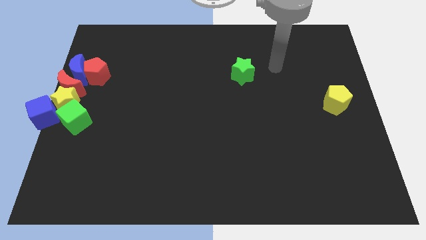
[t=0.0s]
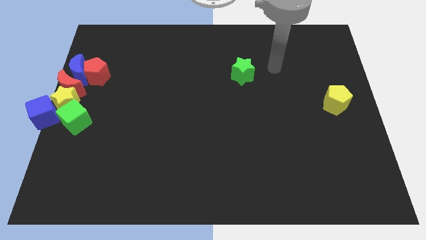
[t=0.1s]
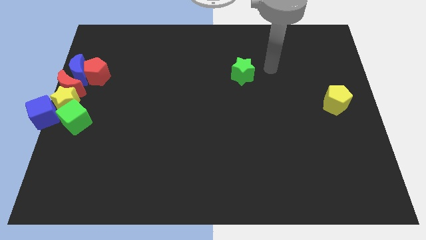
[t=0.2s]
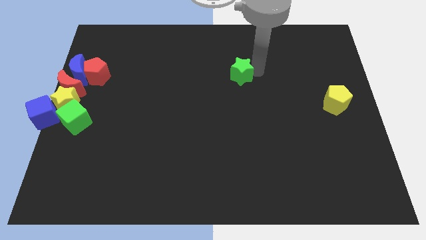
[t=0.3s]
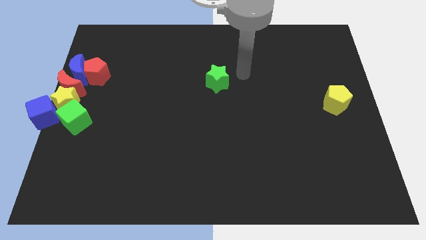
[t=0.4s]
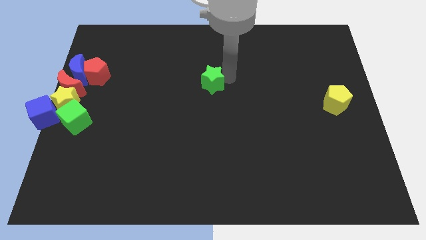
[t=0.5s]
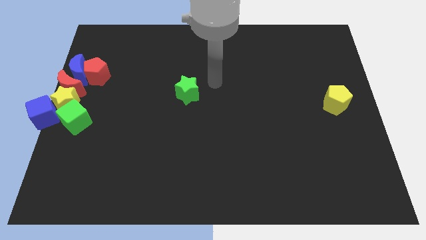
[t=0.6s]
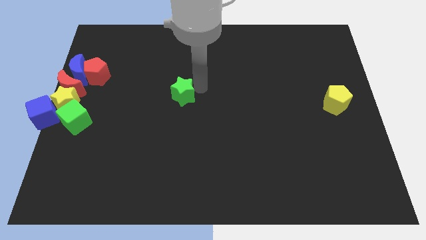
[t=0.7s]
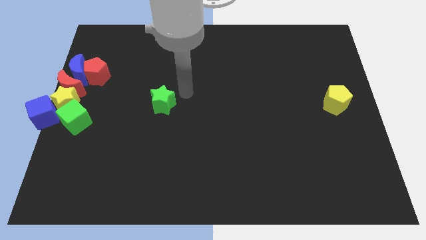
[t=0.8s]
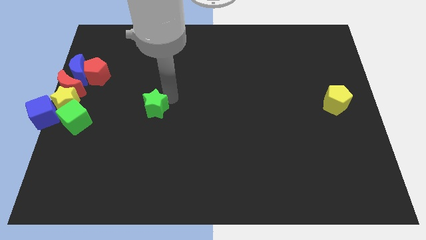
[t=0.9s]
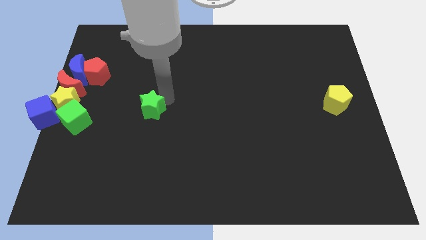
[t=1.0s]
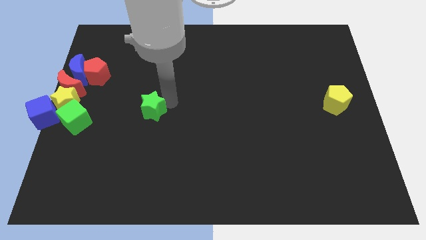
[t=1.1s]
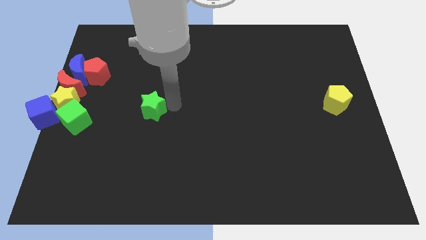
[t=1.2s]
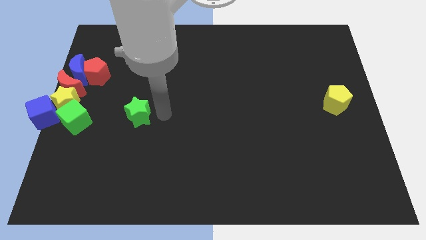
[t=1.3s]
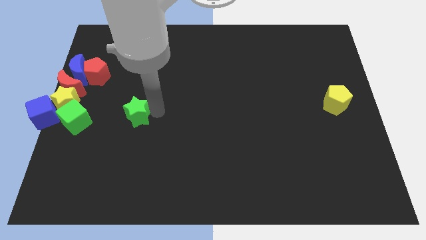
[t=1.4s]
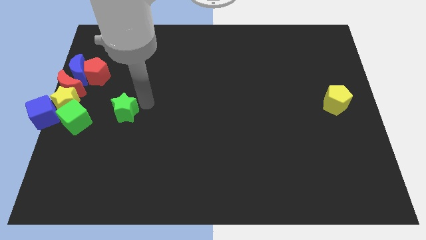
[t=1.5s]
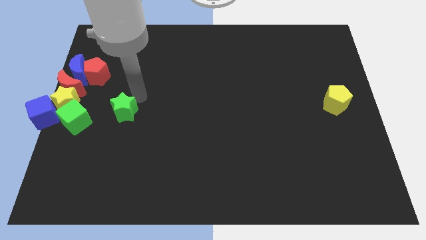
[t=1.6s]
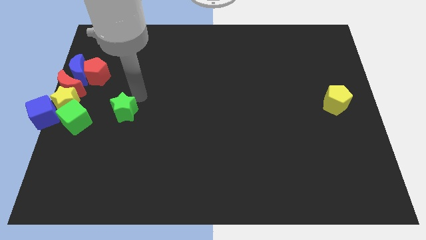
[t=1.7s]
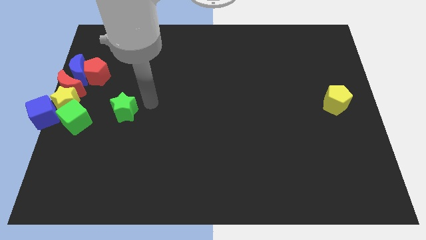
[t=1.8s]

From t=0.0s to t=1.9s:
push the green star towards the green cube

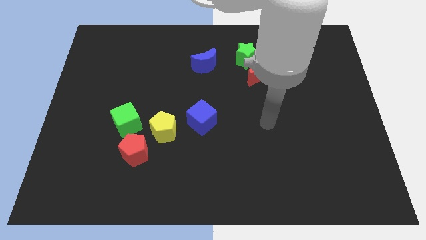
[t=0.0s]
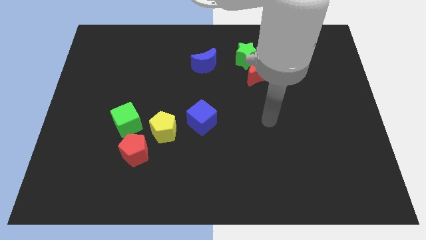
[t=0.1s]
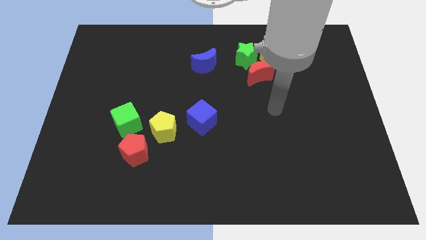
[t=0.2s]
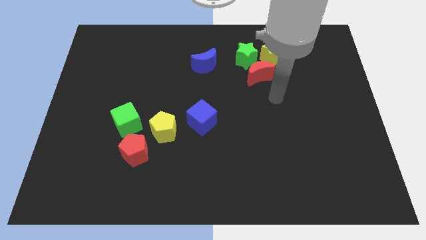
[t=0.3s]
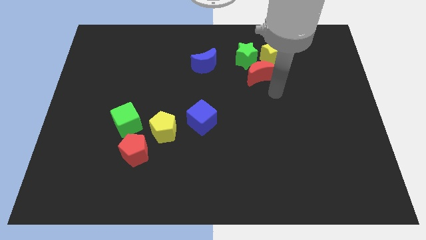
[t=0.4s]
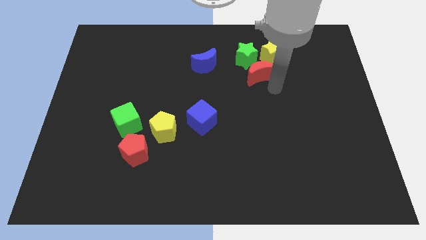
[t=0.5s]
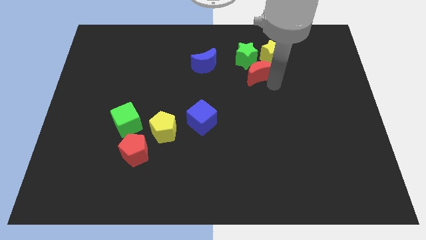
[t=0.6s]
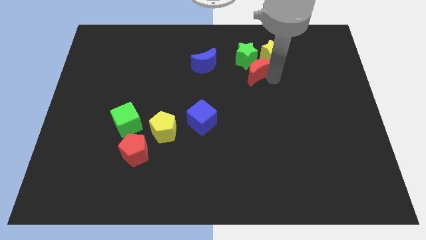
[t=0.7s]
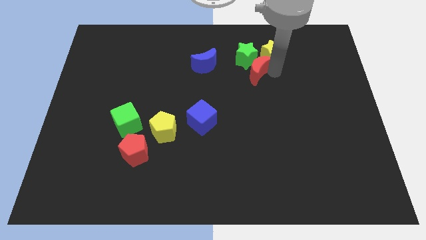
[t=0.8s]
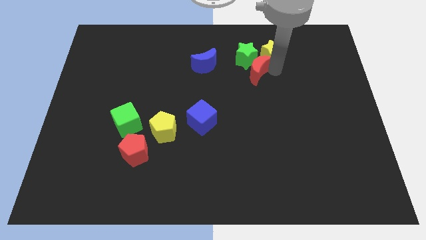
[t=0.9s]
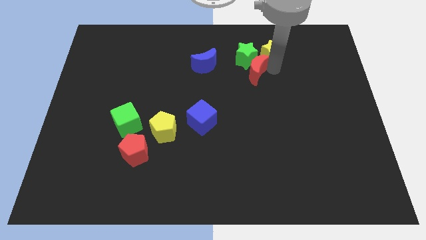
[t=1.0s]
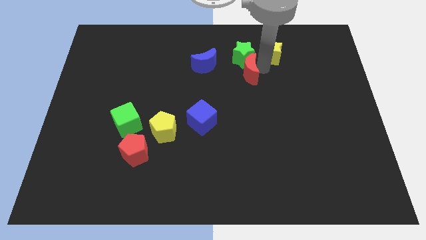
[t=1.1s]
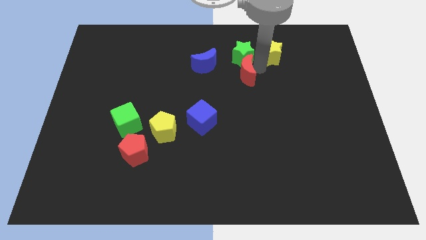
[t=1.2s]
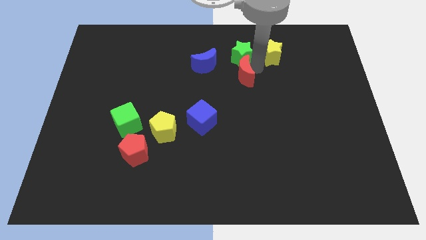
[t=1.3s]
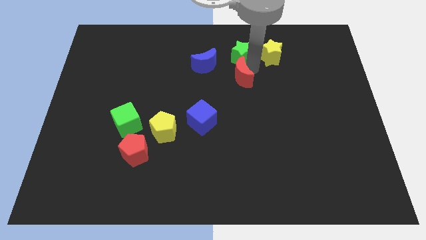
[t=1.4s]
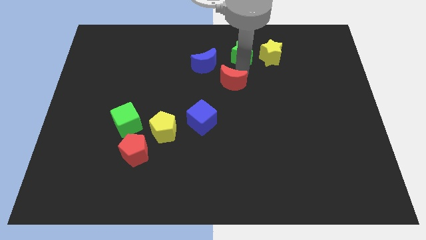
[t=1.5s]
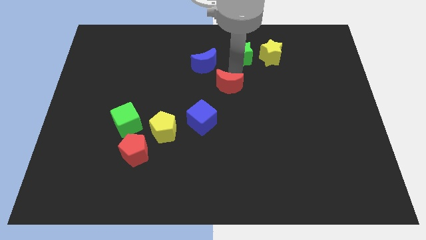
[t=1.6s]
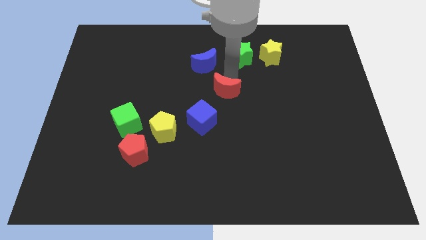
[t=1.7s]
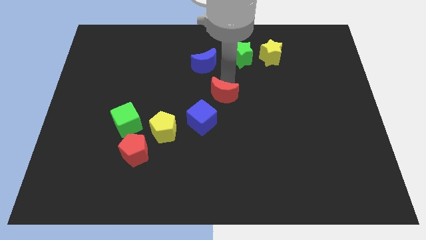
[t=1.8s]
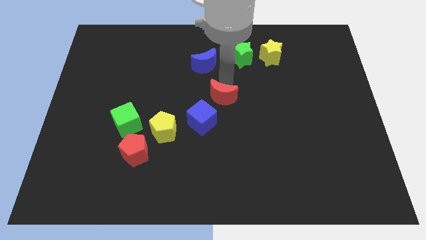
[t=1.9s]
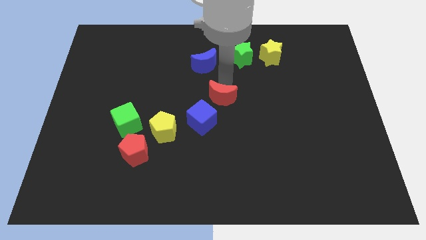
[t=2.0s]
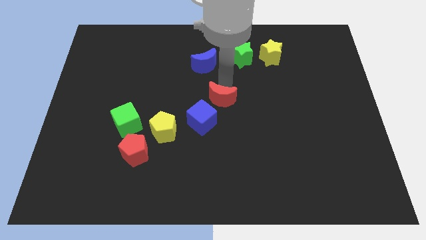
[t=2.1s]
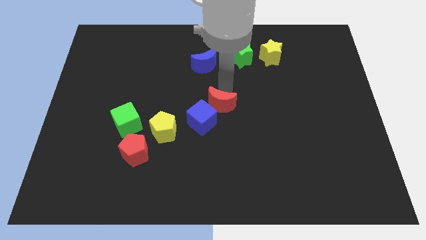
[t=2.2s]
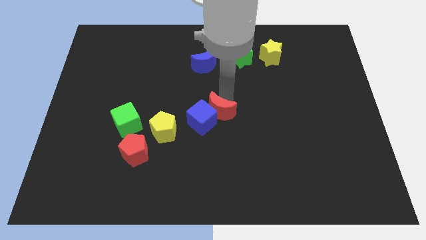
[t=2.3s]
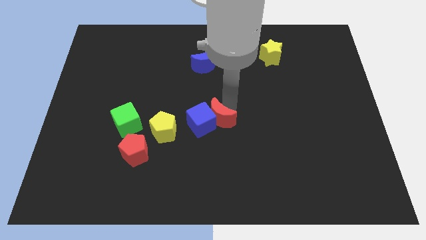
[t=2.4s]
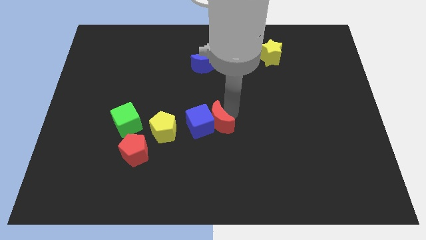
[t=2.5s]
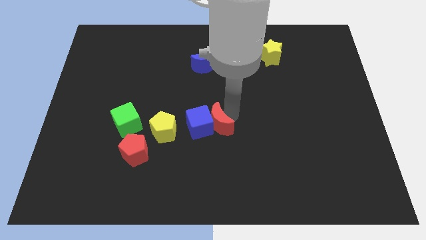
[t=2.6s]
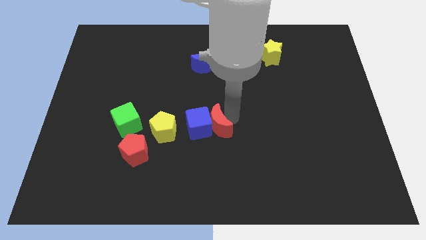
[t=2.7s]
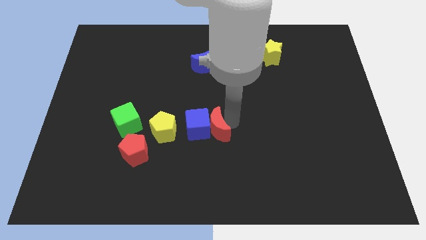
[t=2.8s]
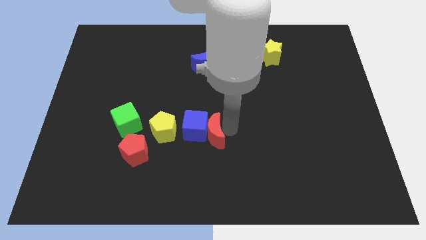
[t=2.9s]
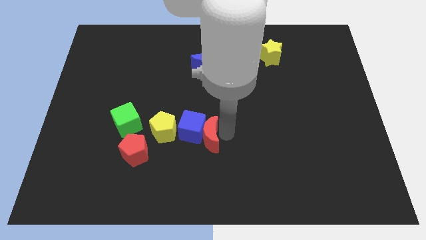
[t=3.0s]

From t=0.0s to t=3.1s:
push red moon into blue cube

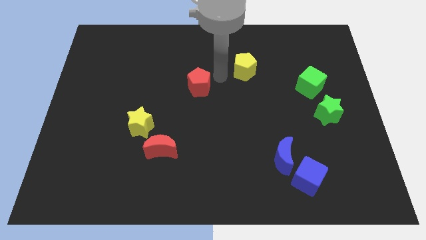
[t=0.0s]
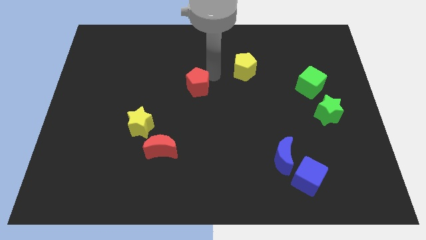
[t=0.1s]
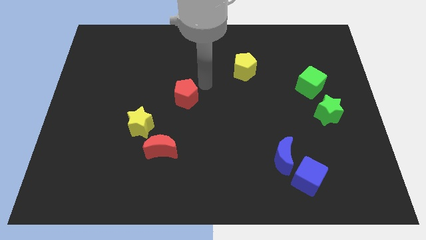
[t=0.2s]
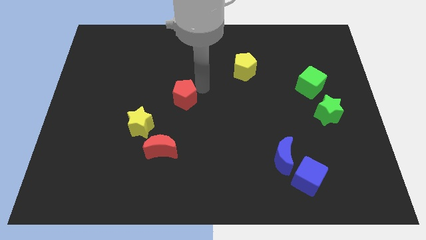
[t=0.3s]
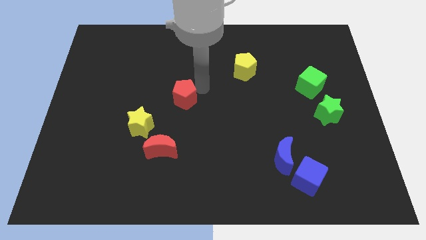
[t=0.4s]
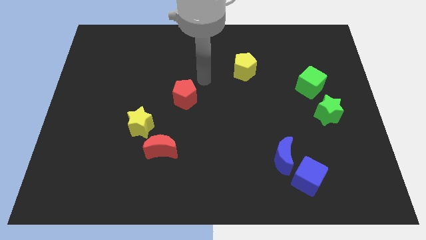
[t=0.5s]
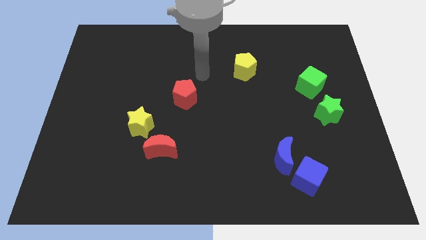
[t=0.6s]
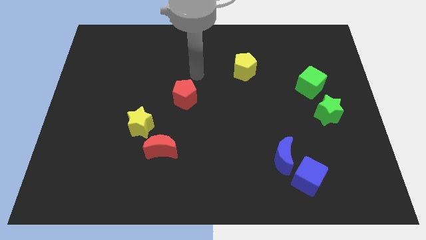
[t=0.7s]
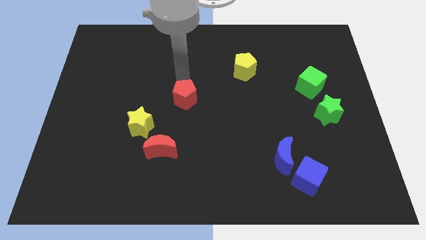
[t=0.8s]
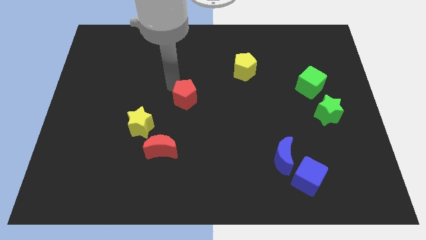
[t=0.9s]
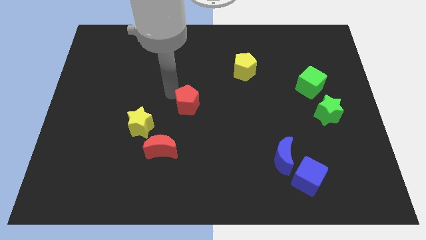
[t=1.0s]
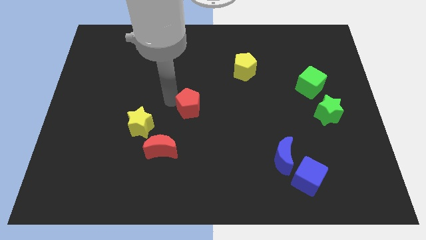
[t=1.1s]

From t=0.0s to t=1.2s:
push the red pentagon towards the red moon

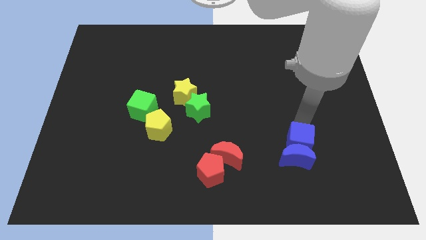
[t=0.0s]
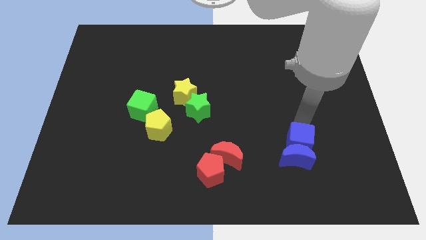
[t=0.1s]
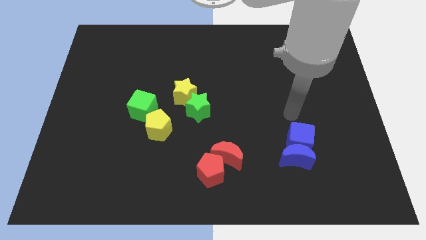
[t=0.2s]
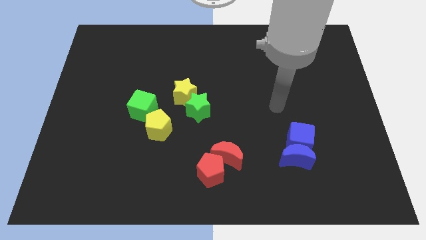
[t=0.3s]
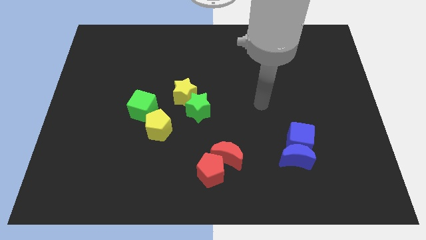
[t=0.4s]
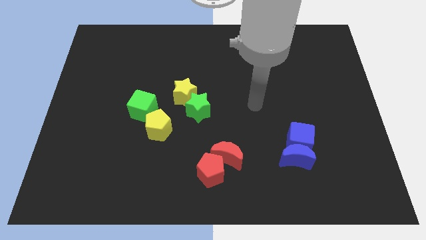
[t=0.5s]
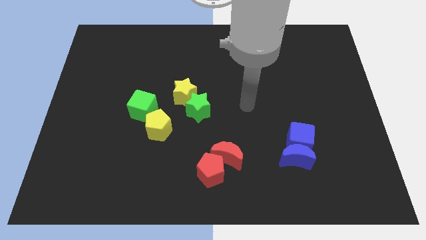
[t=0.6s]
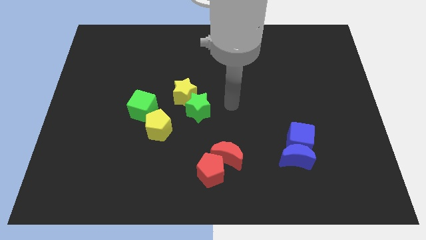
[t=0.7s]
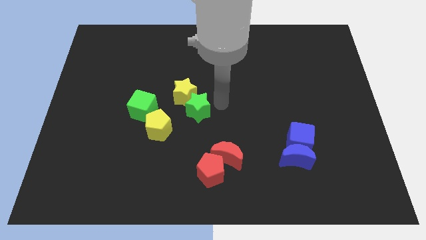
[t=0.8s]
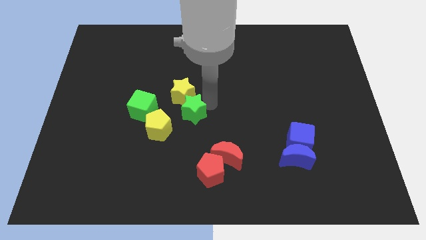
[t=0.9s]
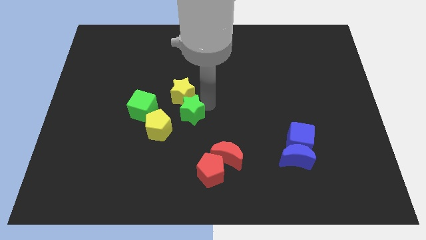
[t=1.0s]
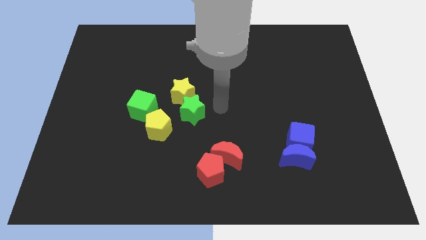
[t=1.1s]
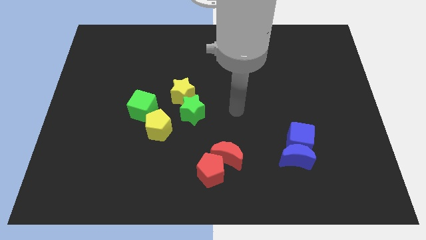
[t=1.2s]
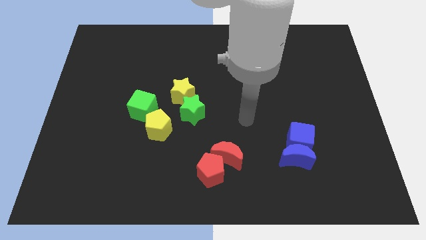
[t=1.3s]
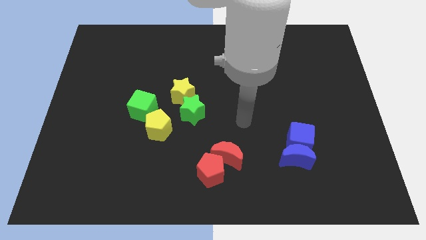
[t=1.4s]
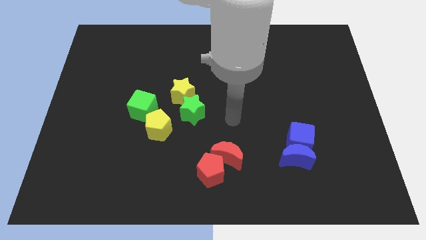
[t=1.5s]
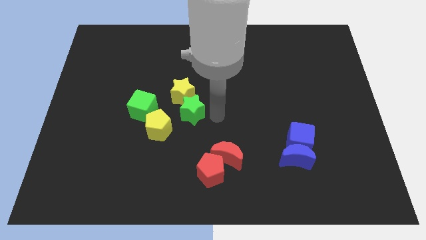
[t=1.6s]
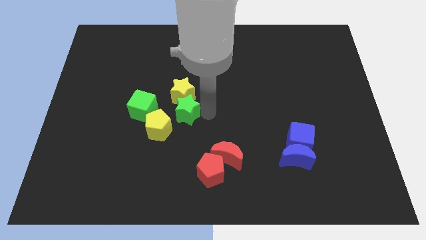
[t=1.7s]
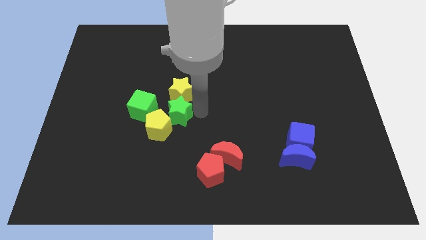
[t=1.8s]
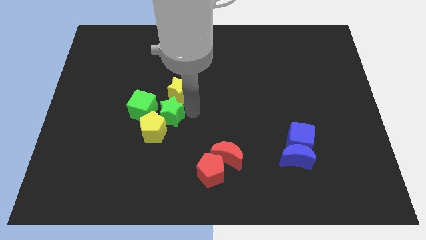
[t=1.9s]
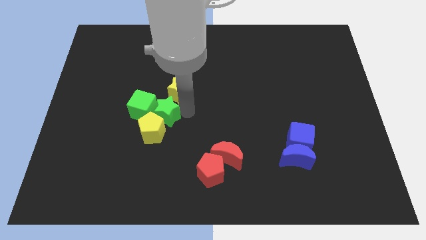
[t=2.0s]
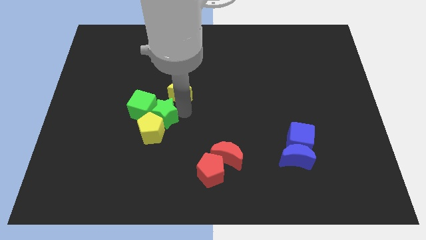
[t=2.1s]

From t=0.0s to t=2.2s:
place the green star right side of the green cube

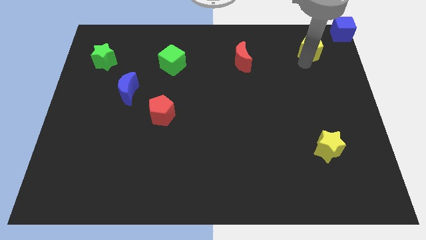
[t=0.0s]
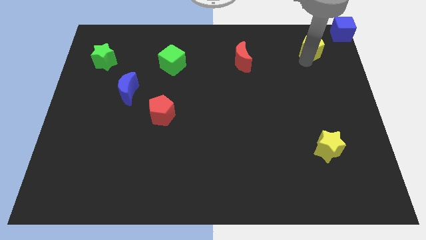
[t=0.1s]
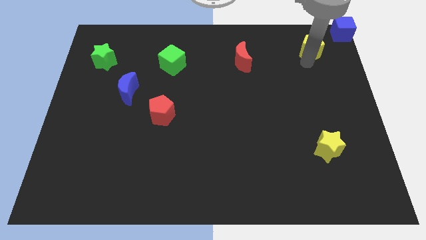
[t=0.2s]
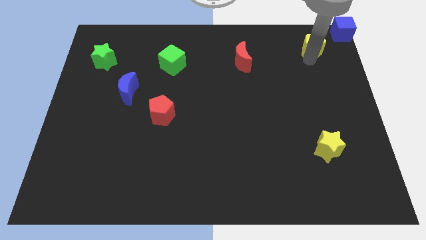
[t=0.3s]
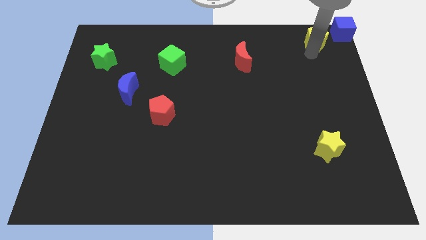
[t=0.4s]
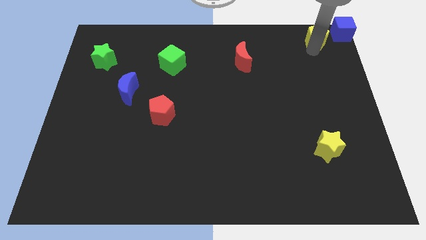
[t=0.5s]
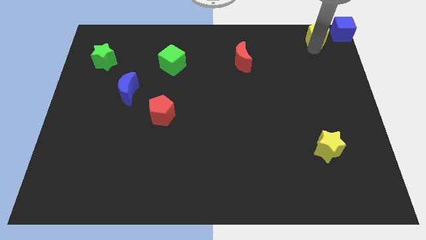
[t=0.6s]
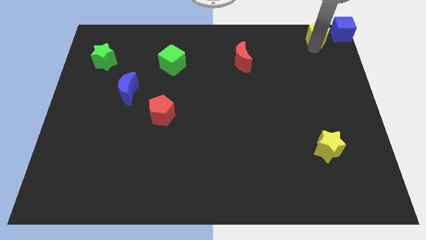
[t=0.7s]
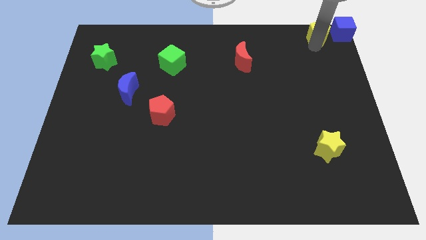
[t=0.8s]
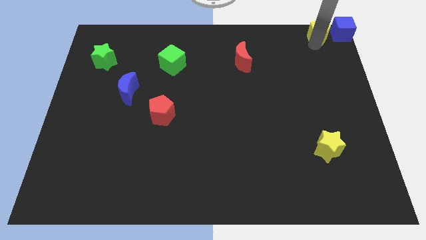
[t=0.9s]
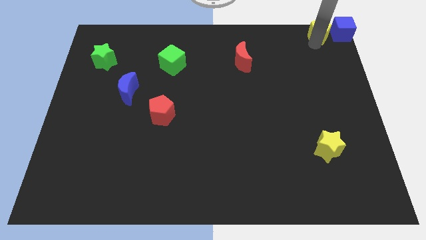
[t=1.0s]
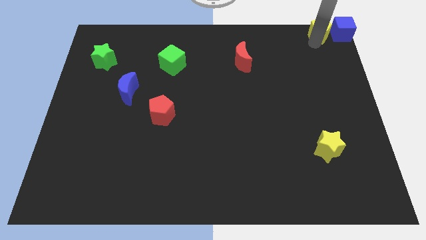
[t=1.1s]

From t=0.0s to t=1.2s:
move the yellow pentagon to the left of blue cube
